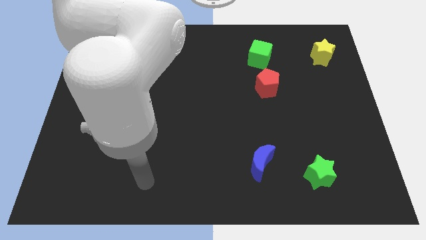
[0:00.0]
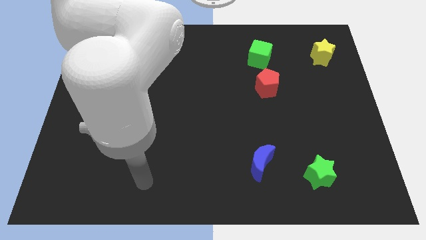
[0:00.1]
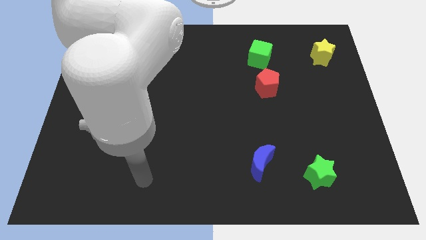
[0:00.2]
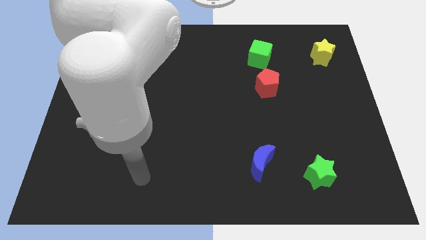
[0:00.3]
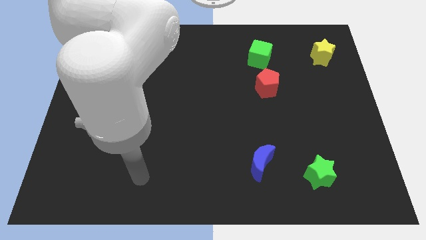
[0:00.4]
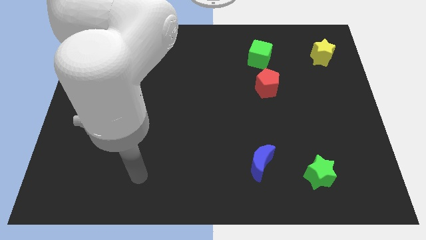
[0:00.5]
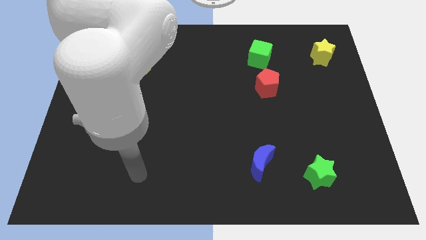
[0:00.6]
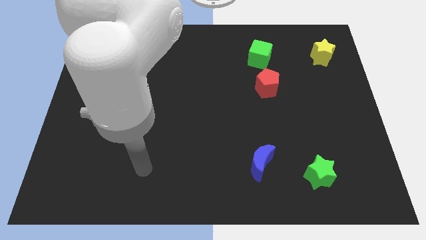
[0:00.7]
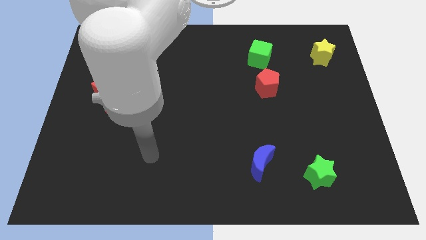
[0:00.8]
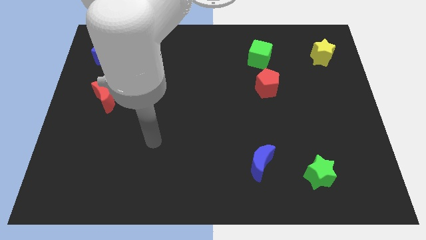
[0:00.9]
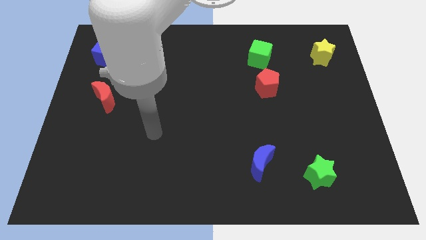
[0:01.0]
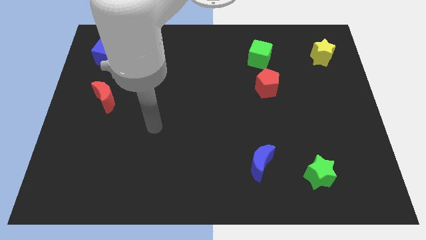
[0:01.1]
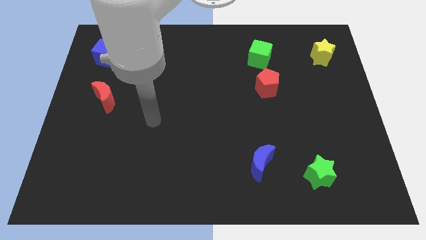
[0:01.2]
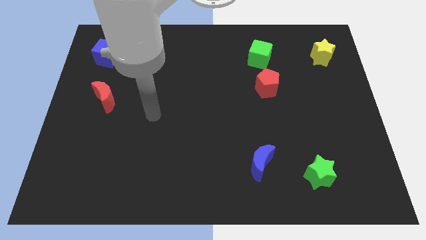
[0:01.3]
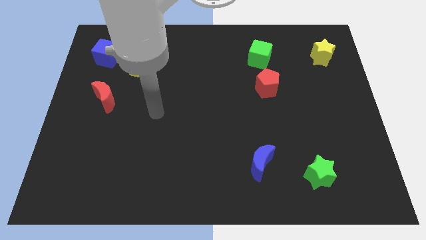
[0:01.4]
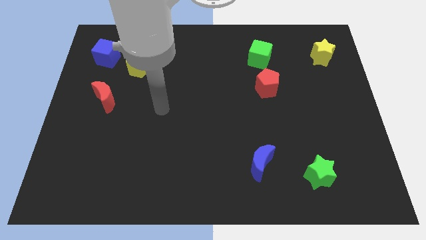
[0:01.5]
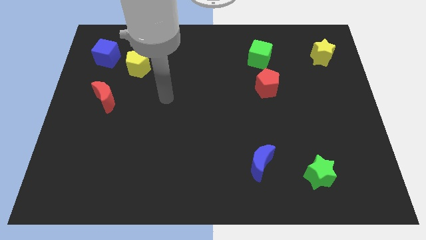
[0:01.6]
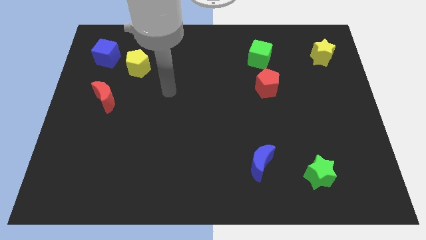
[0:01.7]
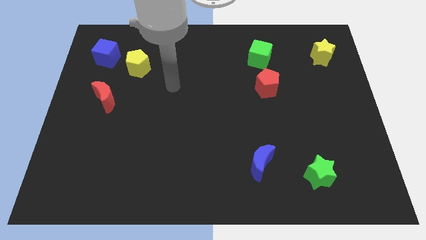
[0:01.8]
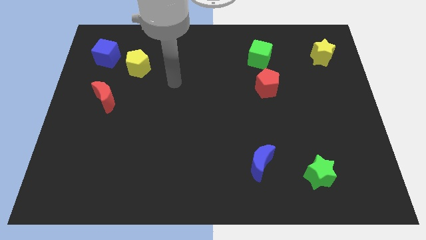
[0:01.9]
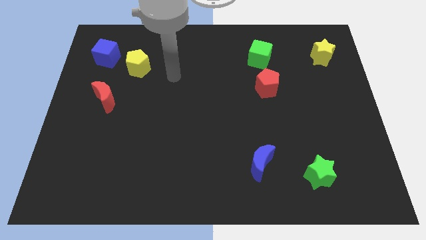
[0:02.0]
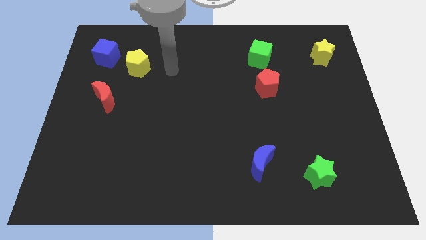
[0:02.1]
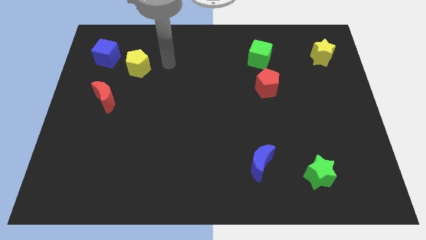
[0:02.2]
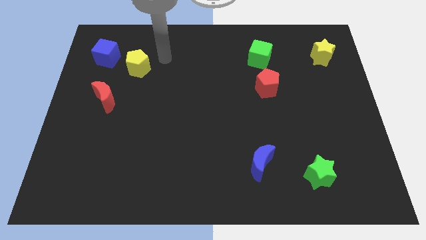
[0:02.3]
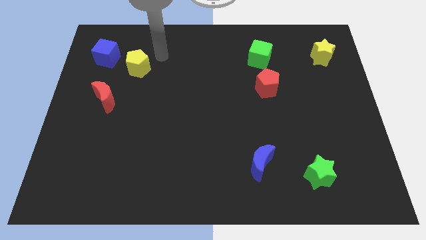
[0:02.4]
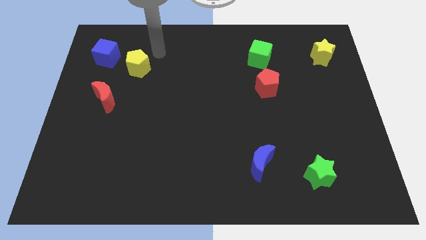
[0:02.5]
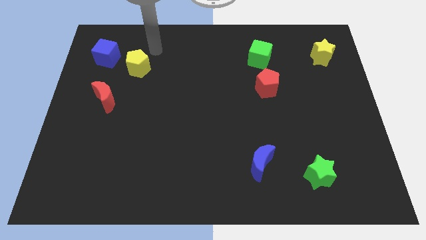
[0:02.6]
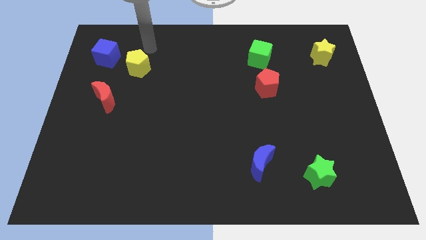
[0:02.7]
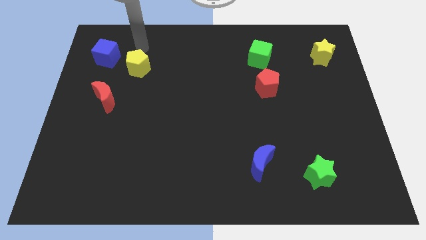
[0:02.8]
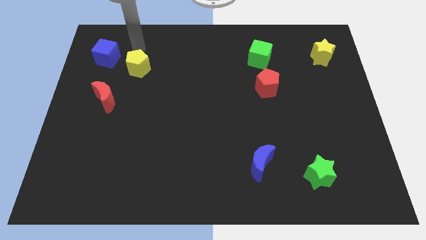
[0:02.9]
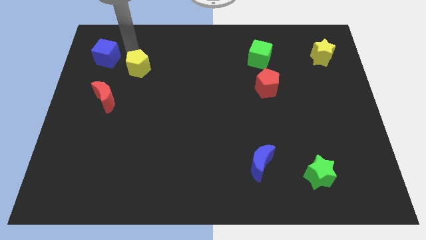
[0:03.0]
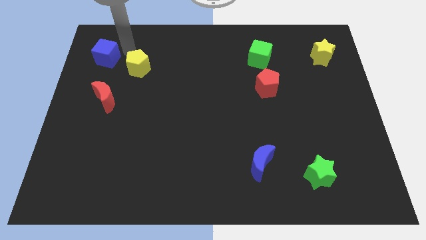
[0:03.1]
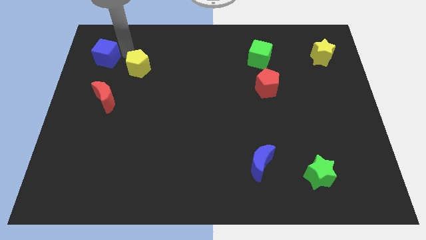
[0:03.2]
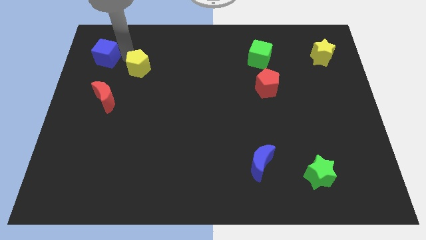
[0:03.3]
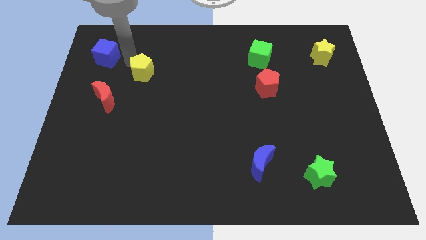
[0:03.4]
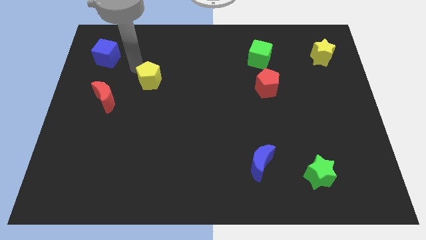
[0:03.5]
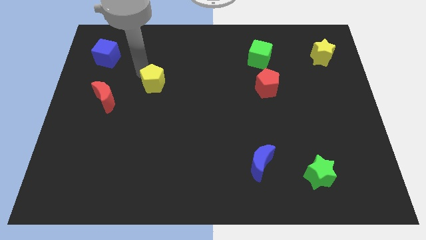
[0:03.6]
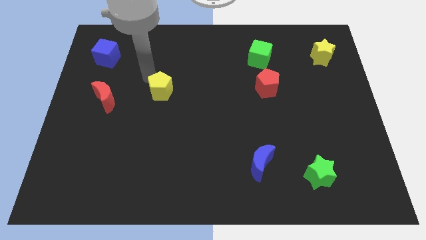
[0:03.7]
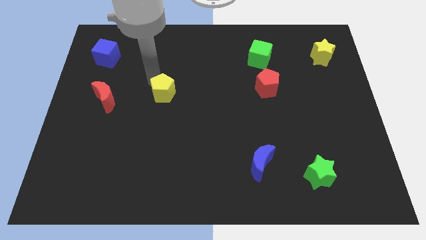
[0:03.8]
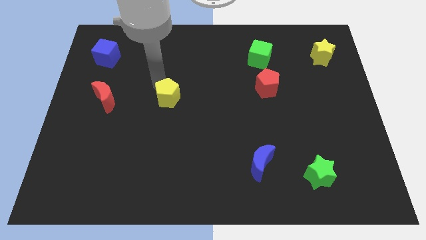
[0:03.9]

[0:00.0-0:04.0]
push the yellow pentagon parallel to red crescent

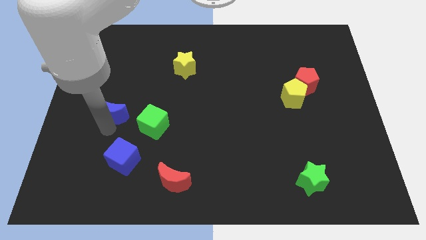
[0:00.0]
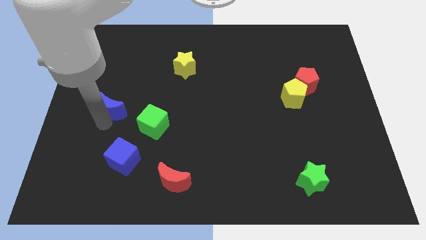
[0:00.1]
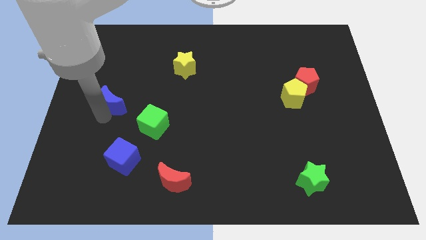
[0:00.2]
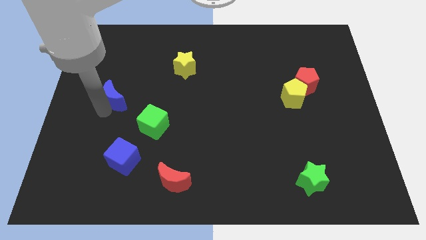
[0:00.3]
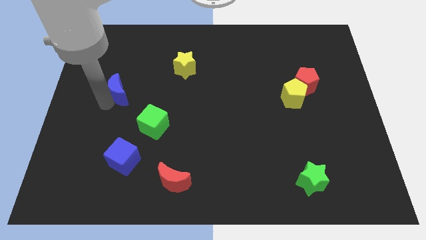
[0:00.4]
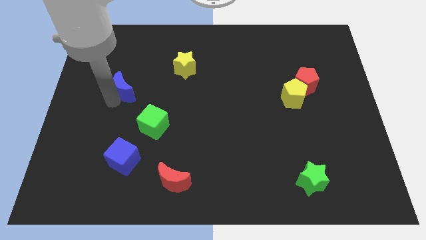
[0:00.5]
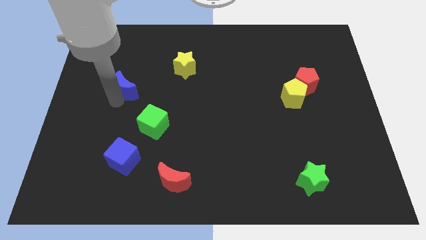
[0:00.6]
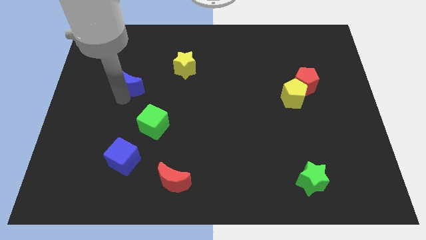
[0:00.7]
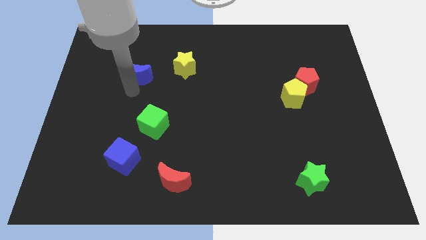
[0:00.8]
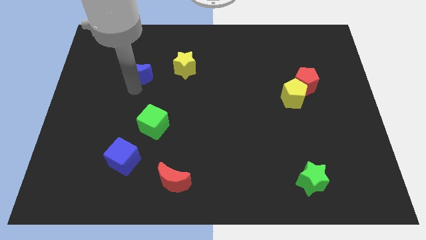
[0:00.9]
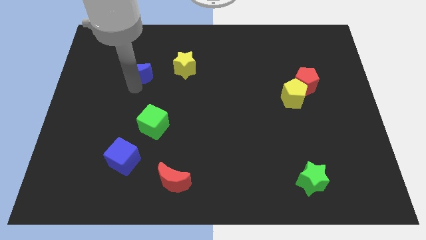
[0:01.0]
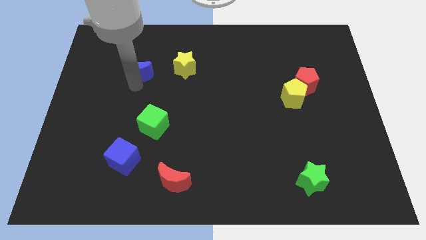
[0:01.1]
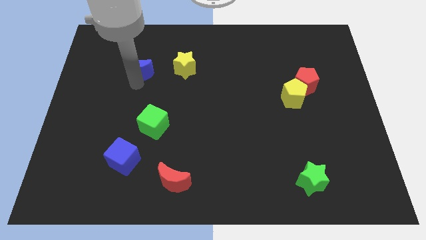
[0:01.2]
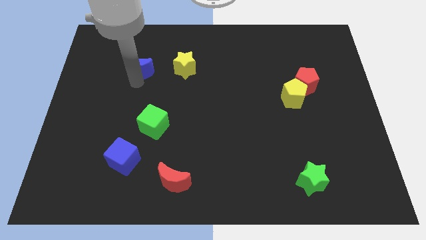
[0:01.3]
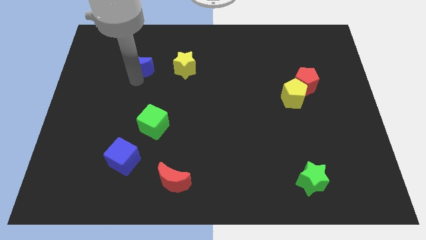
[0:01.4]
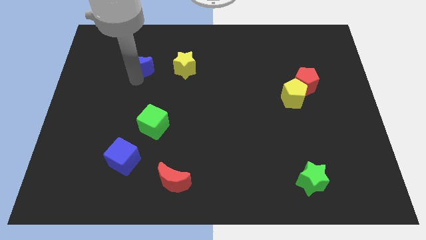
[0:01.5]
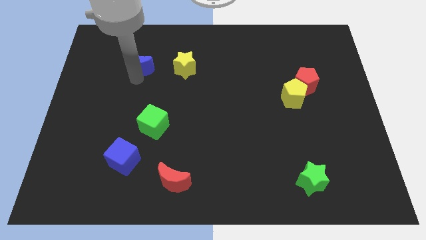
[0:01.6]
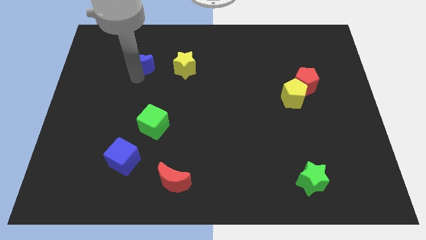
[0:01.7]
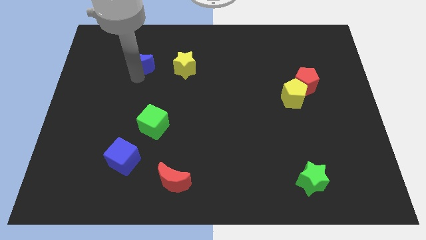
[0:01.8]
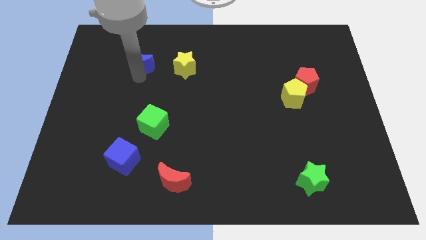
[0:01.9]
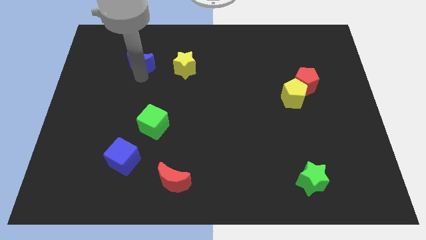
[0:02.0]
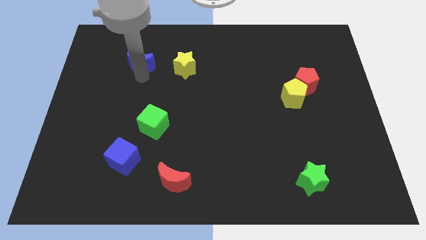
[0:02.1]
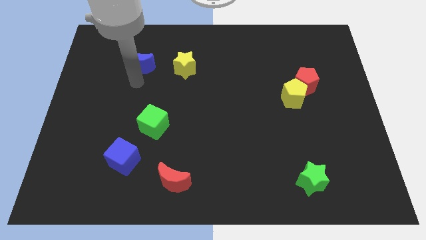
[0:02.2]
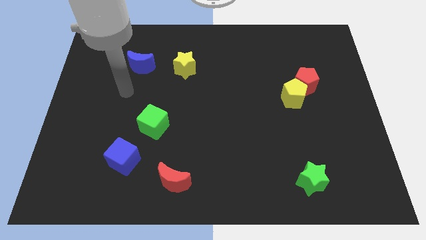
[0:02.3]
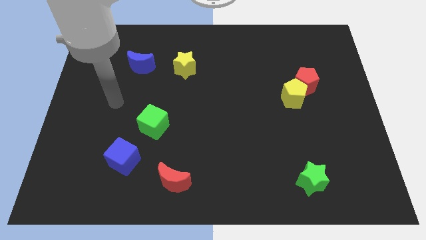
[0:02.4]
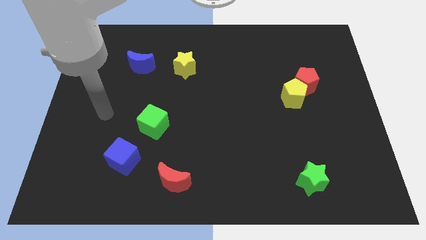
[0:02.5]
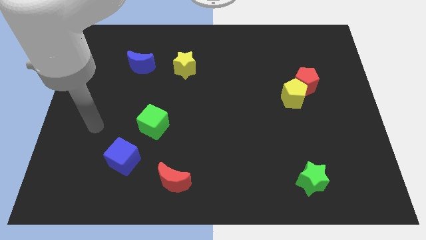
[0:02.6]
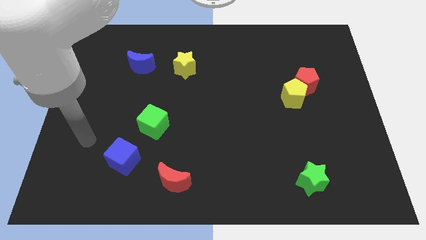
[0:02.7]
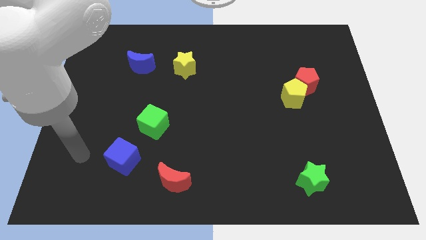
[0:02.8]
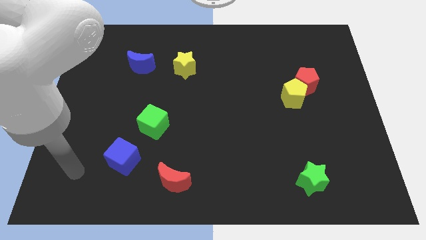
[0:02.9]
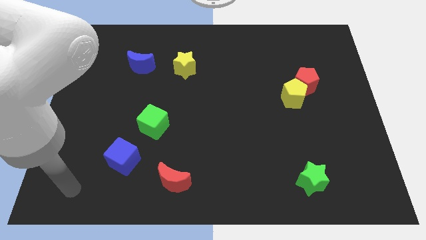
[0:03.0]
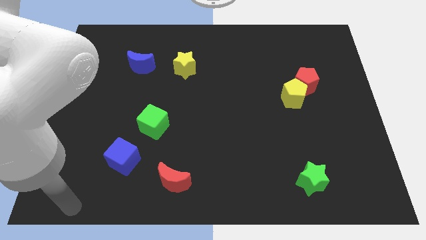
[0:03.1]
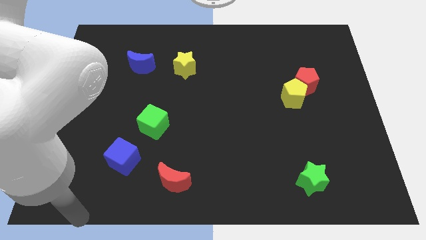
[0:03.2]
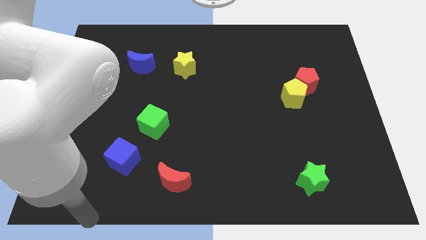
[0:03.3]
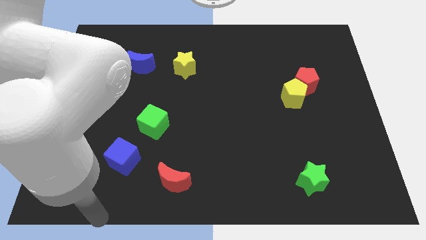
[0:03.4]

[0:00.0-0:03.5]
move the blue moon to left side of yellow star

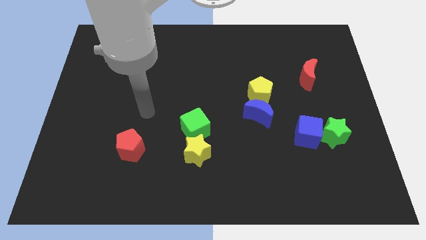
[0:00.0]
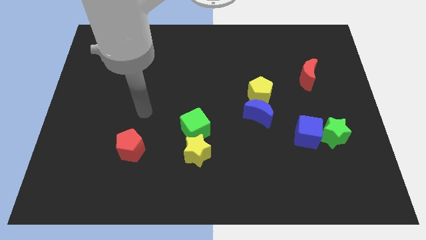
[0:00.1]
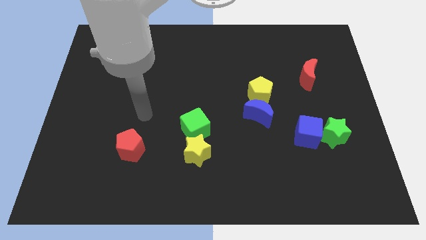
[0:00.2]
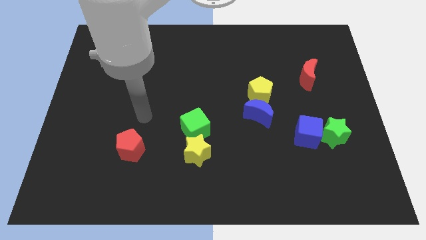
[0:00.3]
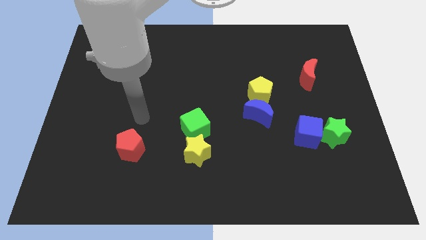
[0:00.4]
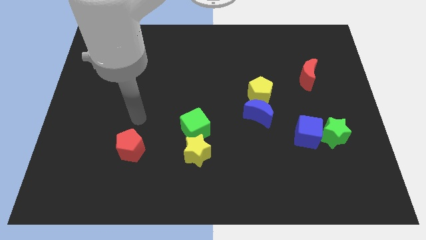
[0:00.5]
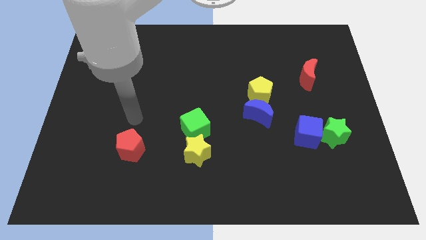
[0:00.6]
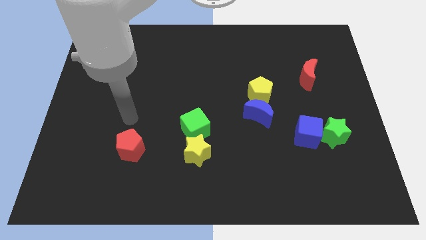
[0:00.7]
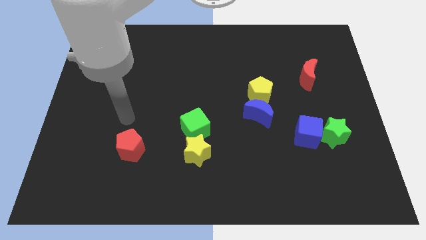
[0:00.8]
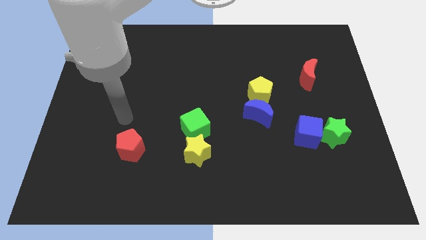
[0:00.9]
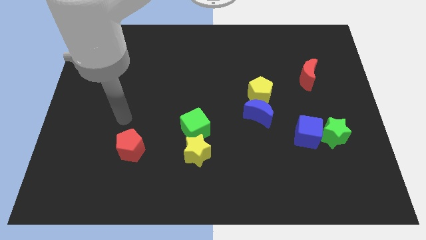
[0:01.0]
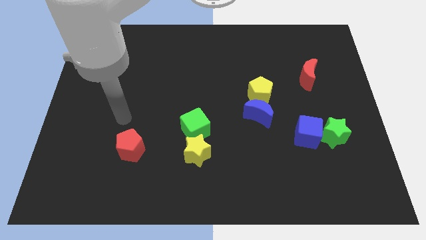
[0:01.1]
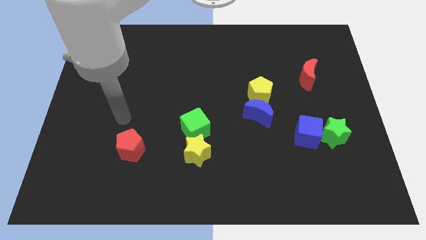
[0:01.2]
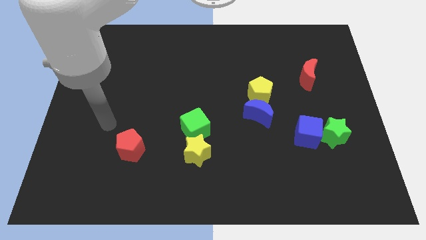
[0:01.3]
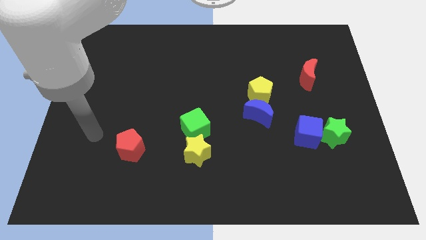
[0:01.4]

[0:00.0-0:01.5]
move your hand parallel left to the red pentagon

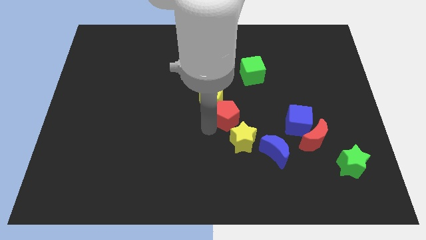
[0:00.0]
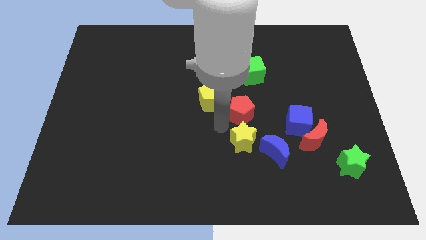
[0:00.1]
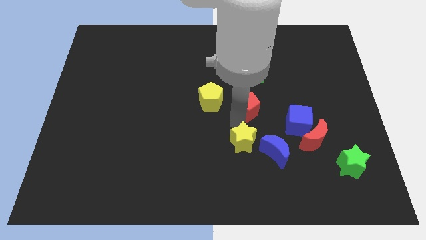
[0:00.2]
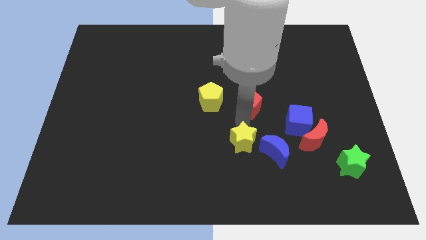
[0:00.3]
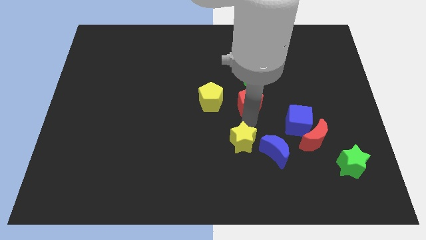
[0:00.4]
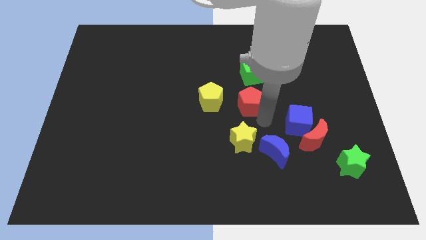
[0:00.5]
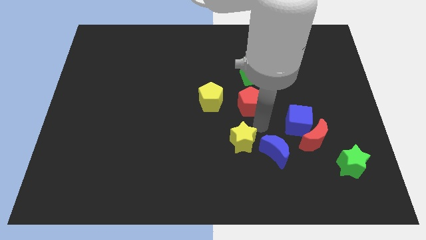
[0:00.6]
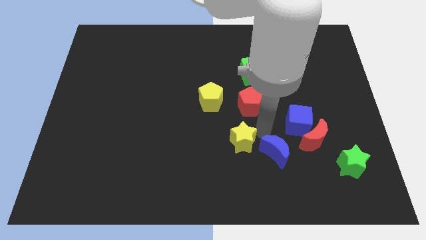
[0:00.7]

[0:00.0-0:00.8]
place the red pentagon below the green cube
